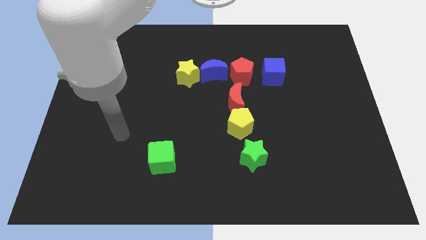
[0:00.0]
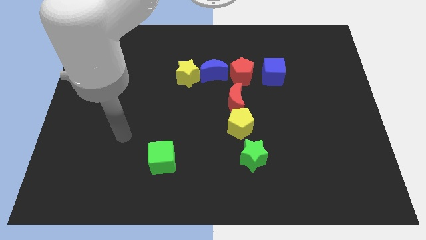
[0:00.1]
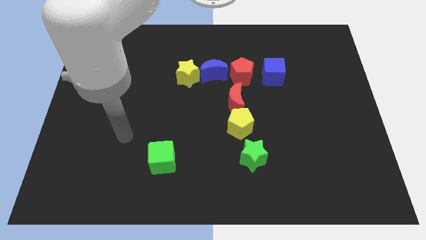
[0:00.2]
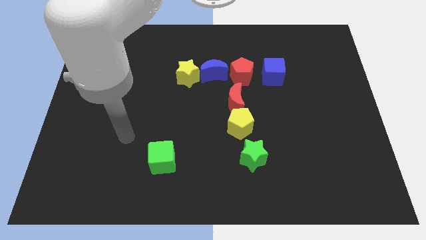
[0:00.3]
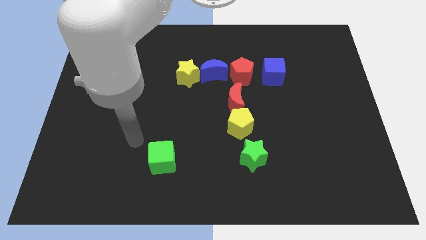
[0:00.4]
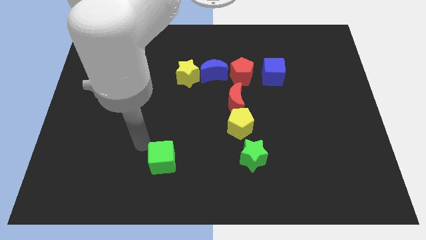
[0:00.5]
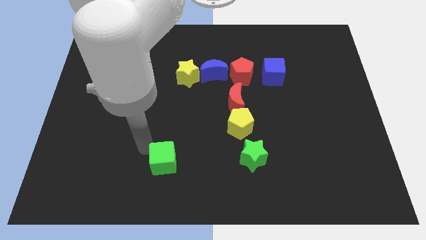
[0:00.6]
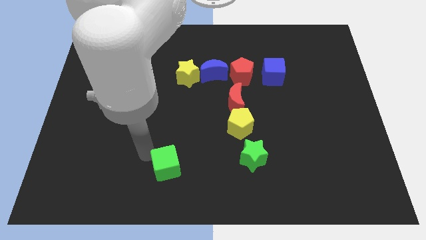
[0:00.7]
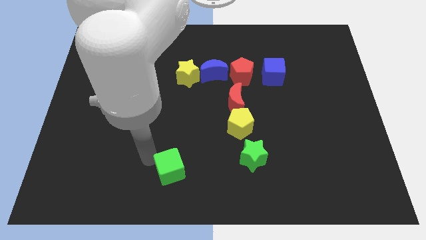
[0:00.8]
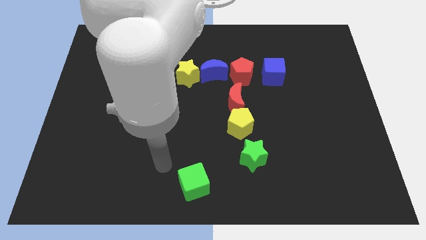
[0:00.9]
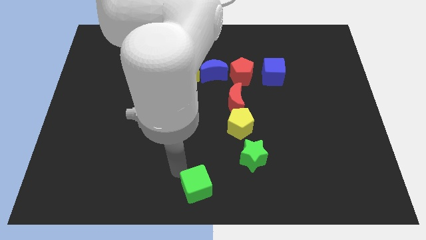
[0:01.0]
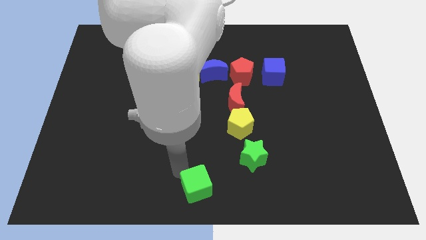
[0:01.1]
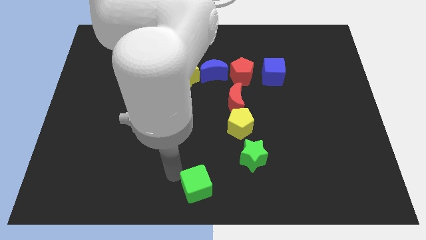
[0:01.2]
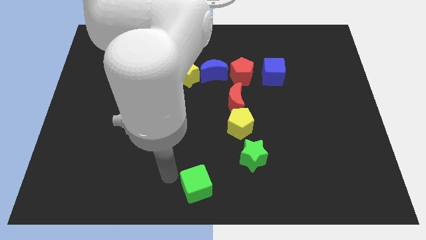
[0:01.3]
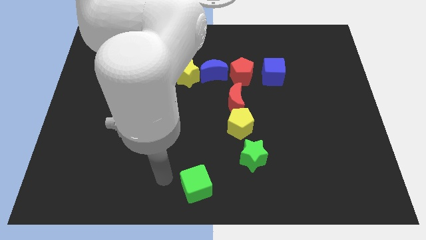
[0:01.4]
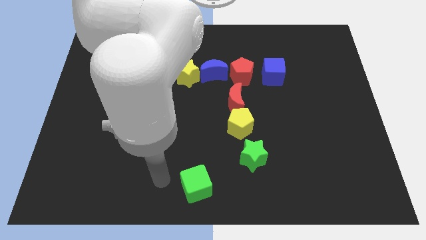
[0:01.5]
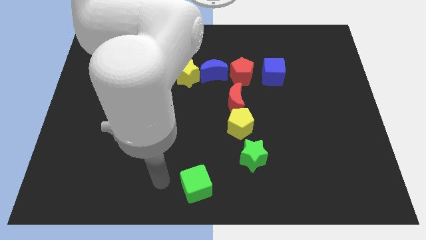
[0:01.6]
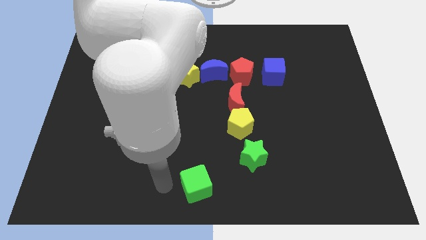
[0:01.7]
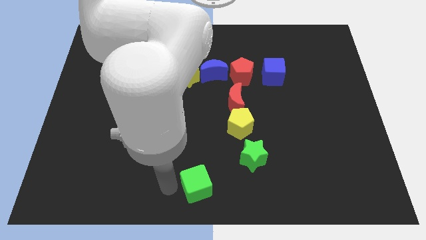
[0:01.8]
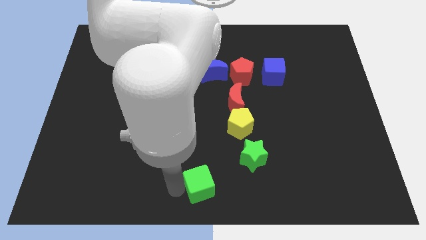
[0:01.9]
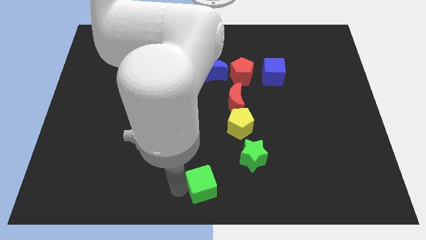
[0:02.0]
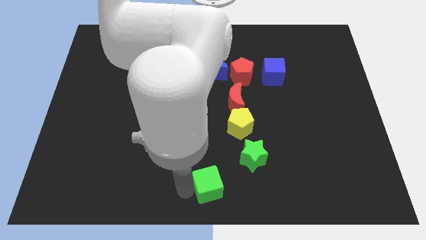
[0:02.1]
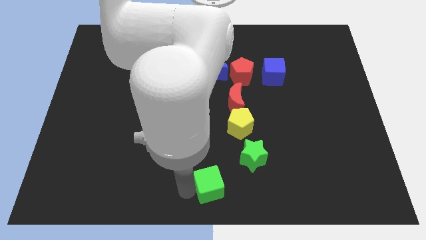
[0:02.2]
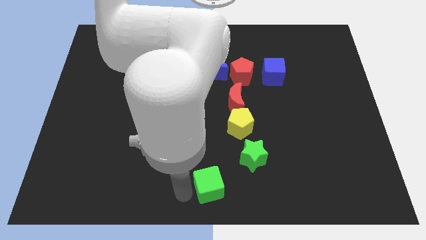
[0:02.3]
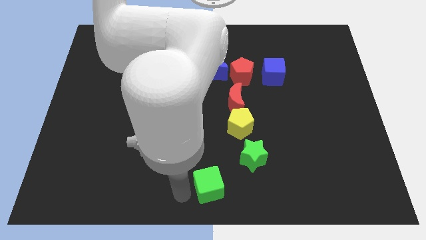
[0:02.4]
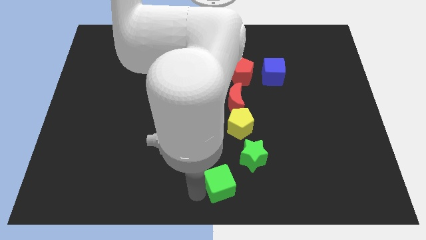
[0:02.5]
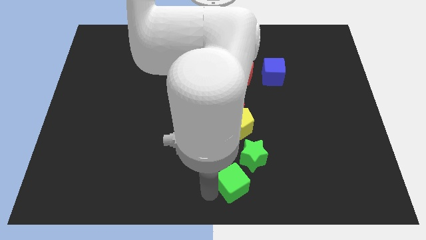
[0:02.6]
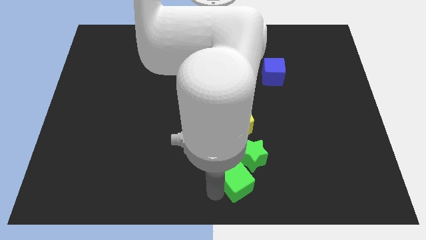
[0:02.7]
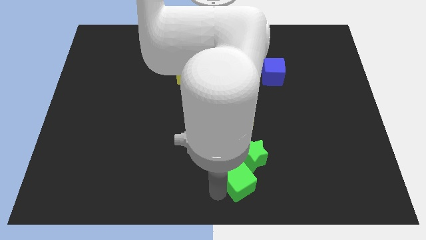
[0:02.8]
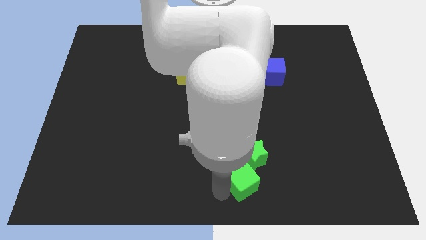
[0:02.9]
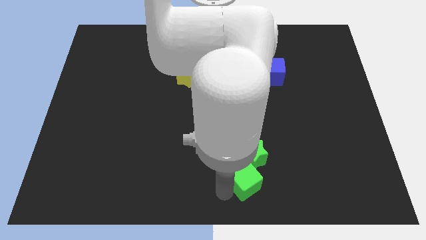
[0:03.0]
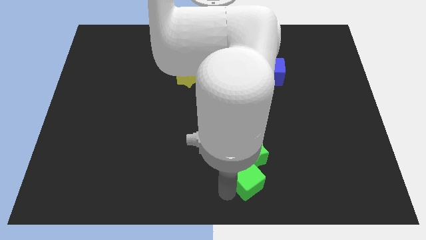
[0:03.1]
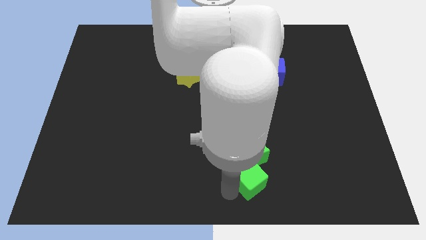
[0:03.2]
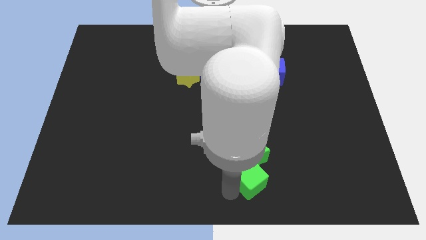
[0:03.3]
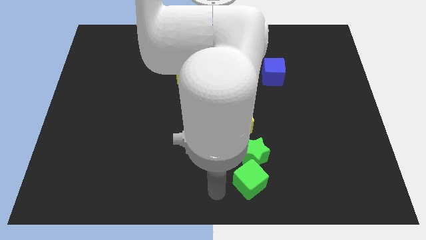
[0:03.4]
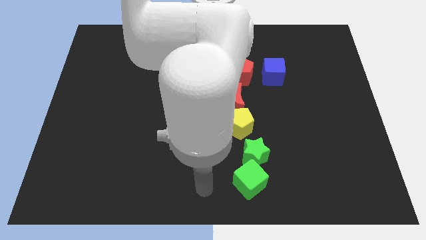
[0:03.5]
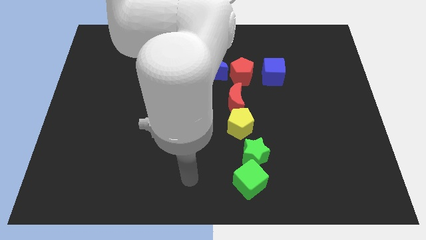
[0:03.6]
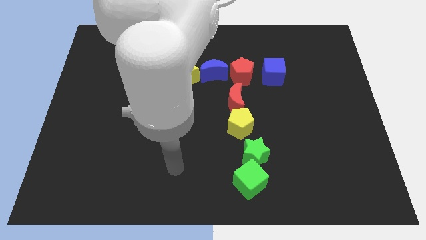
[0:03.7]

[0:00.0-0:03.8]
push the green cube below the green star

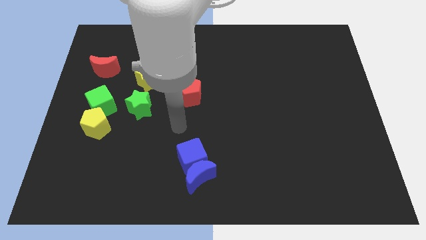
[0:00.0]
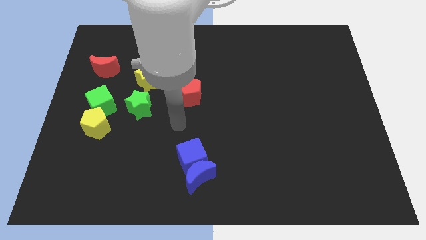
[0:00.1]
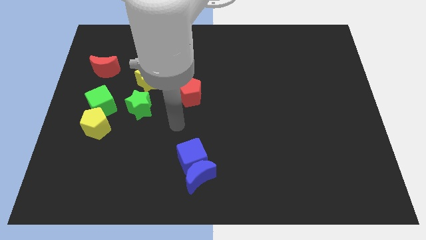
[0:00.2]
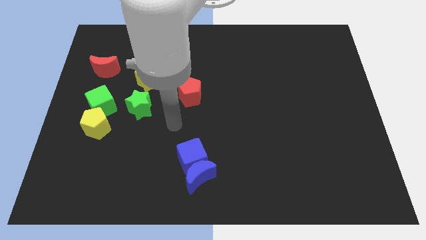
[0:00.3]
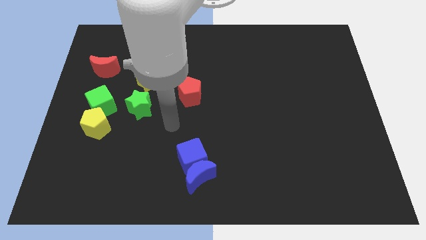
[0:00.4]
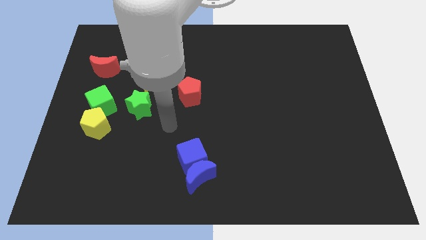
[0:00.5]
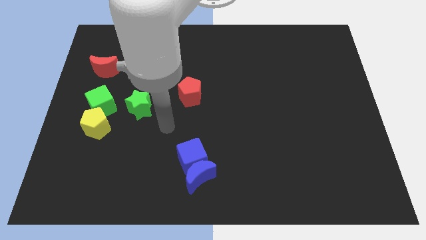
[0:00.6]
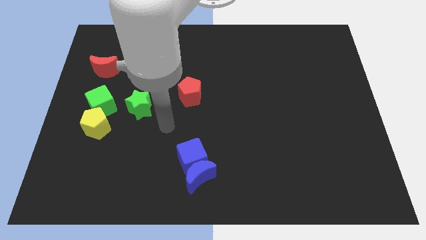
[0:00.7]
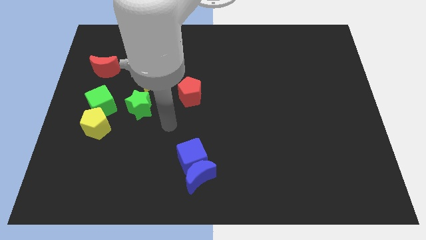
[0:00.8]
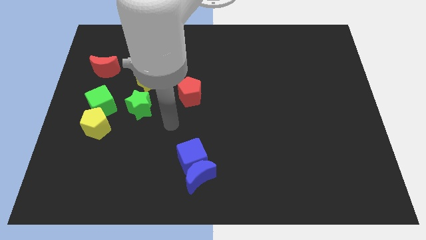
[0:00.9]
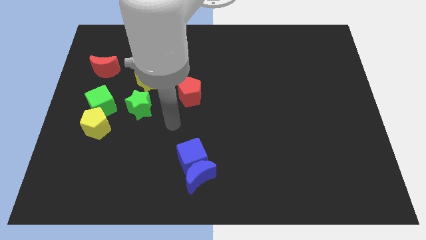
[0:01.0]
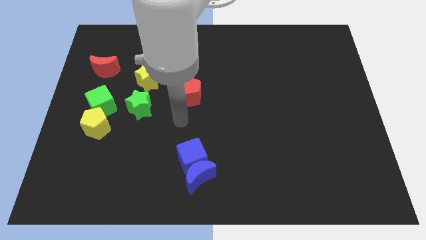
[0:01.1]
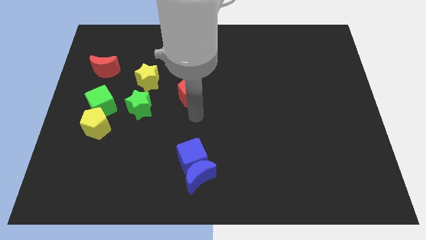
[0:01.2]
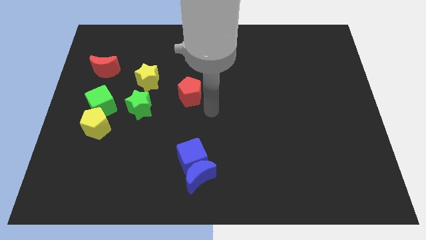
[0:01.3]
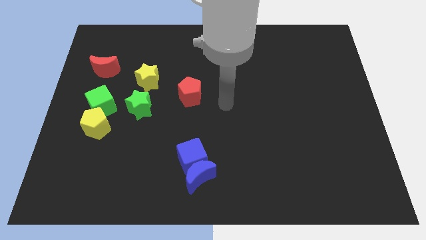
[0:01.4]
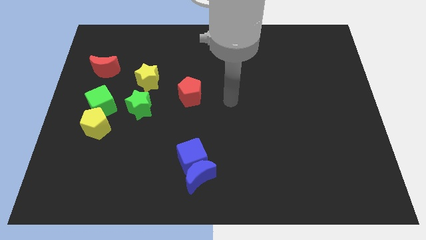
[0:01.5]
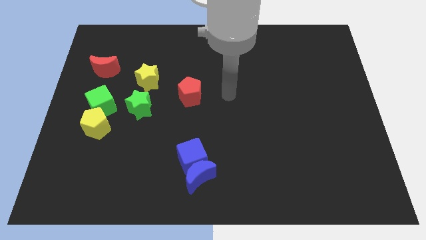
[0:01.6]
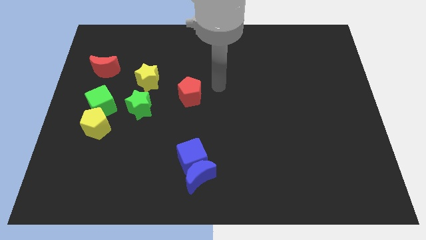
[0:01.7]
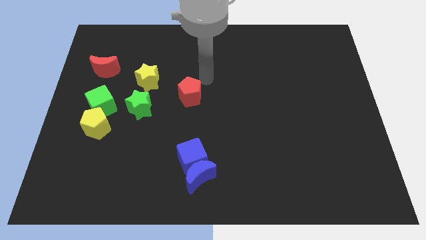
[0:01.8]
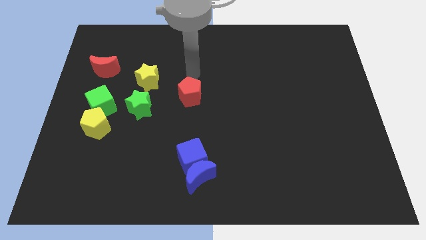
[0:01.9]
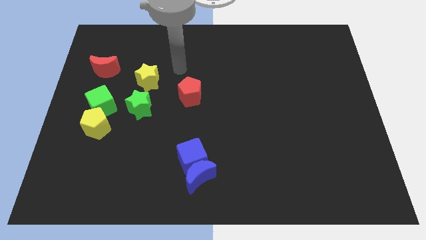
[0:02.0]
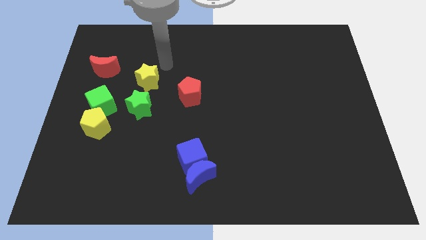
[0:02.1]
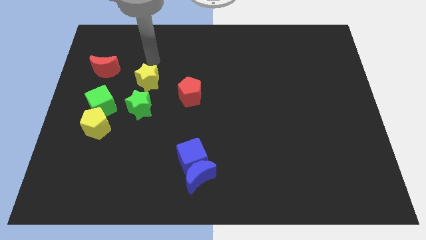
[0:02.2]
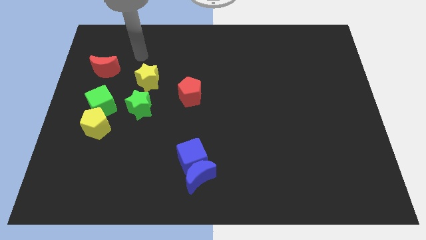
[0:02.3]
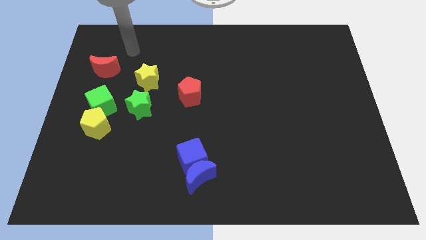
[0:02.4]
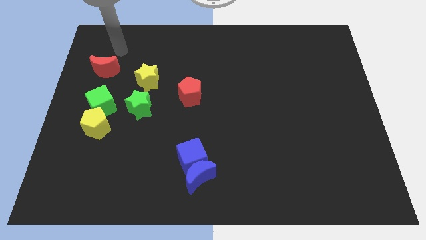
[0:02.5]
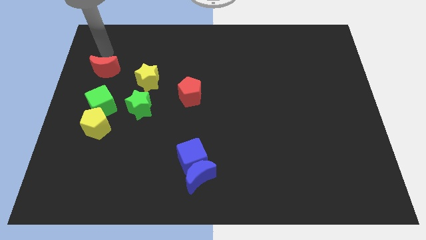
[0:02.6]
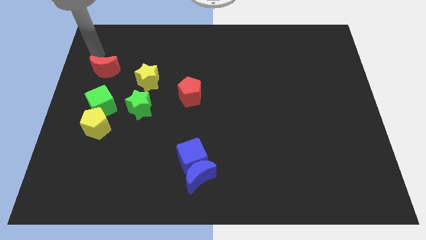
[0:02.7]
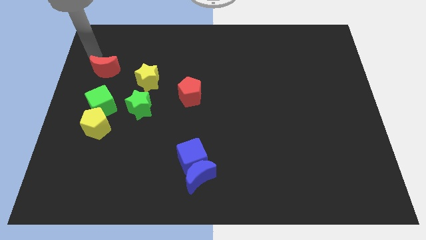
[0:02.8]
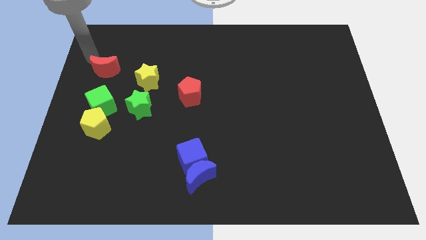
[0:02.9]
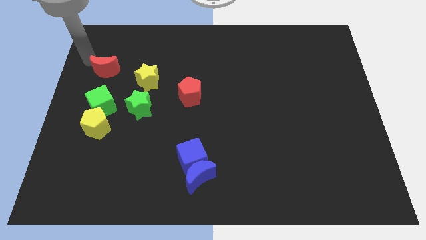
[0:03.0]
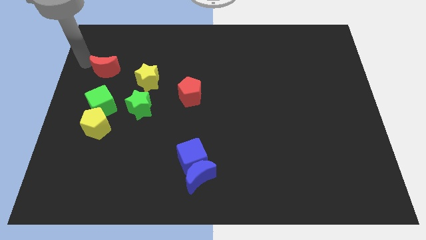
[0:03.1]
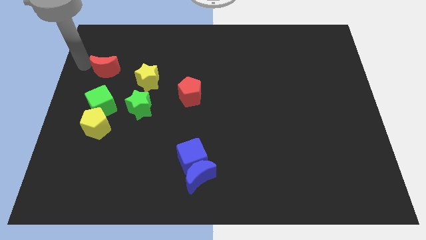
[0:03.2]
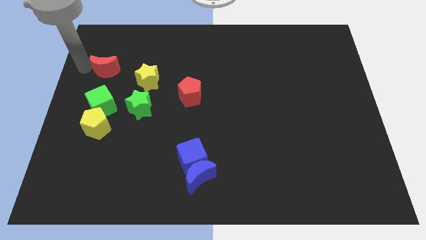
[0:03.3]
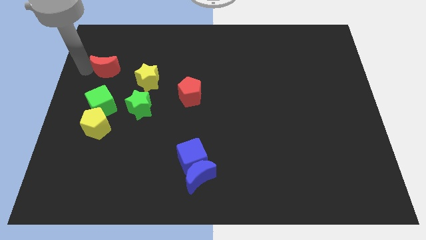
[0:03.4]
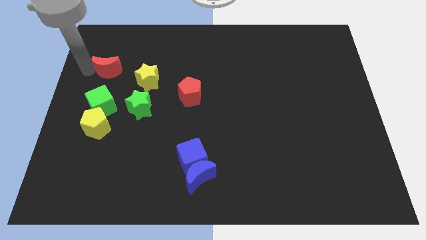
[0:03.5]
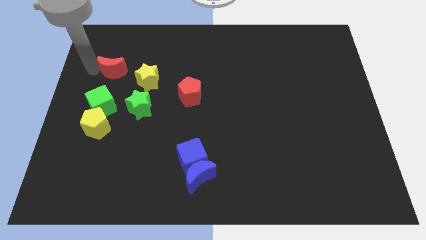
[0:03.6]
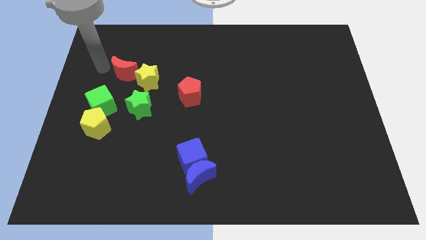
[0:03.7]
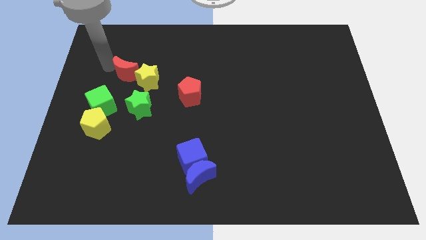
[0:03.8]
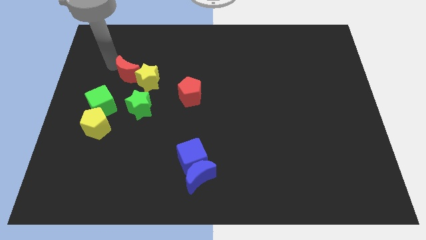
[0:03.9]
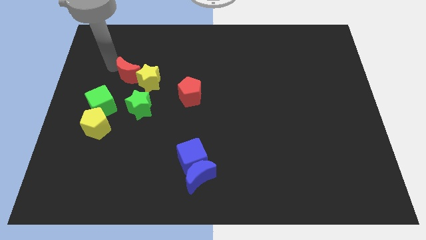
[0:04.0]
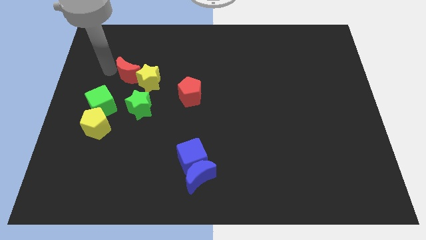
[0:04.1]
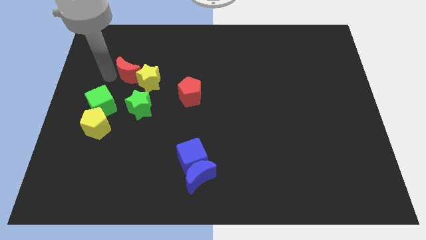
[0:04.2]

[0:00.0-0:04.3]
move the red moon into the yellow star

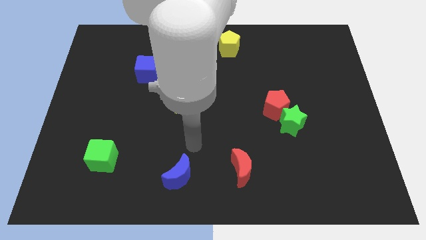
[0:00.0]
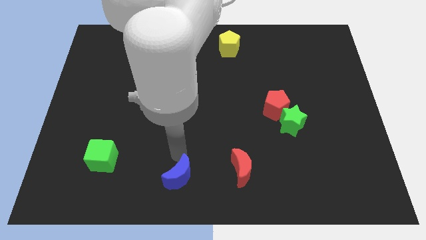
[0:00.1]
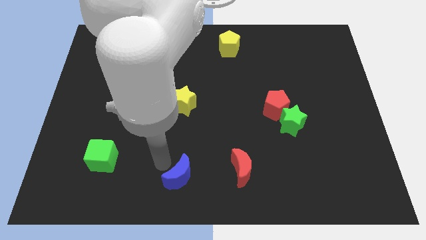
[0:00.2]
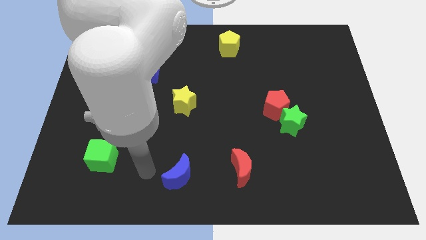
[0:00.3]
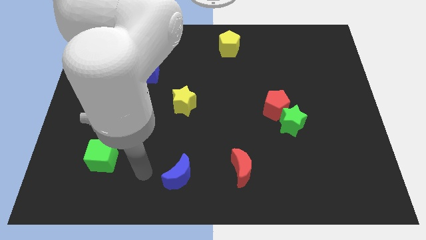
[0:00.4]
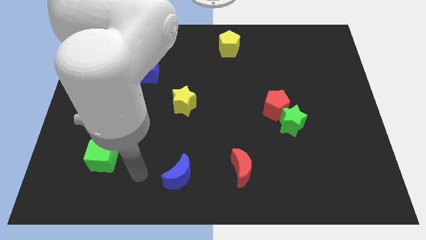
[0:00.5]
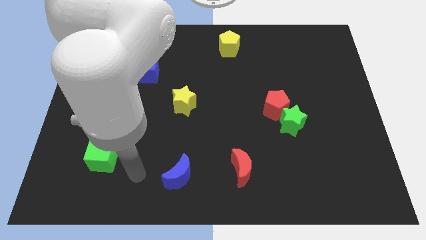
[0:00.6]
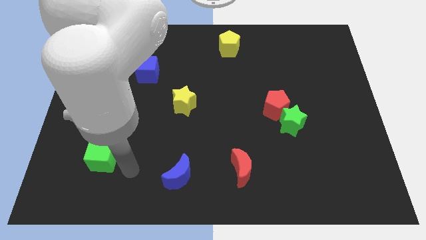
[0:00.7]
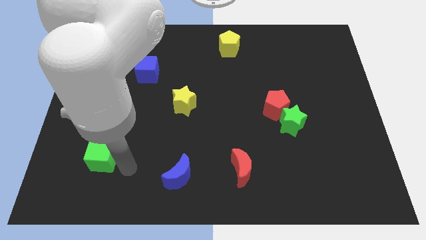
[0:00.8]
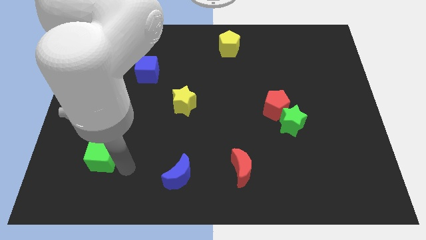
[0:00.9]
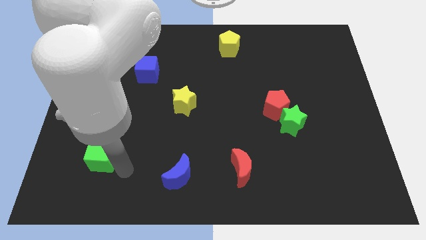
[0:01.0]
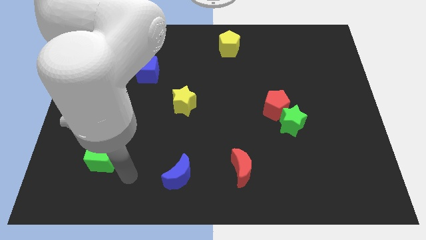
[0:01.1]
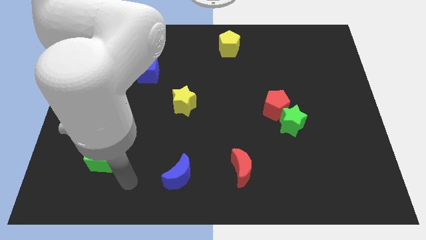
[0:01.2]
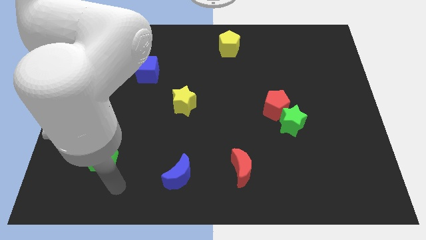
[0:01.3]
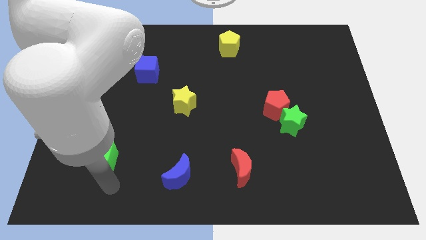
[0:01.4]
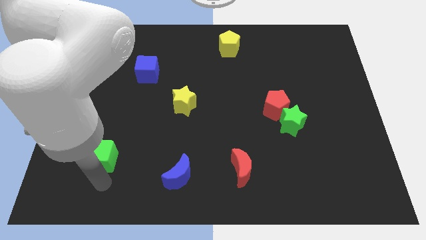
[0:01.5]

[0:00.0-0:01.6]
point the arm below the green cube
